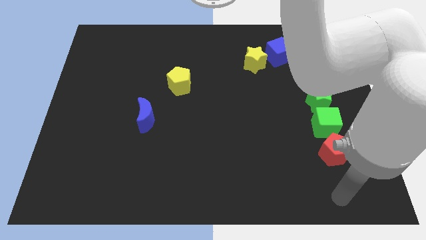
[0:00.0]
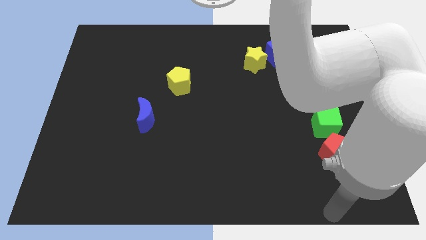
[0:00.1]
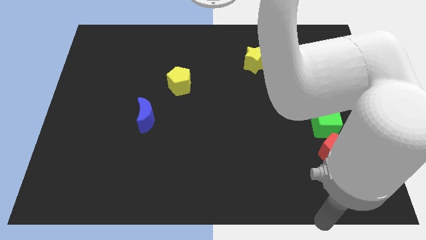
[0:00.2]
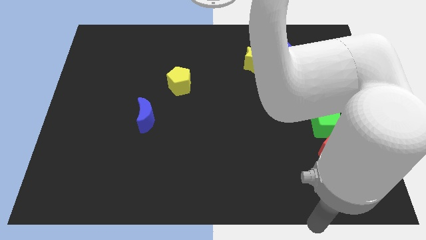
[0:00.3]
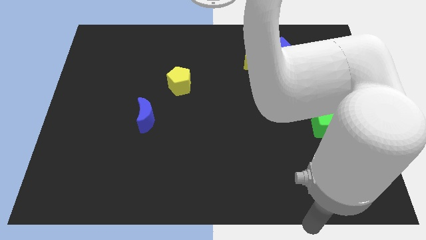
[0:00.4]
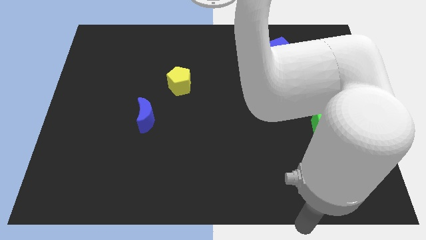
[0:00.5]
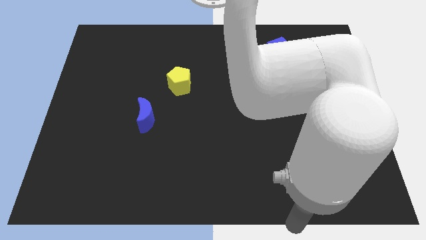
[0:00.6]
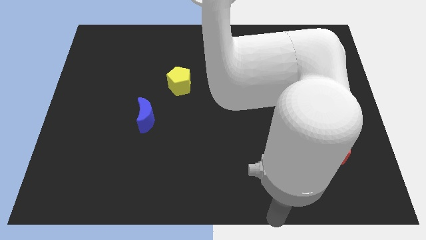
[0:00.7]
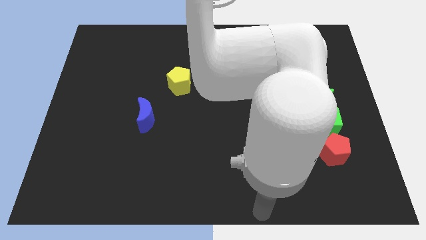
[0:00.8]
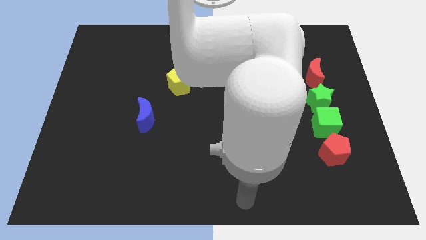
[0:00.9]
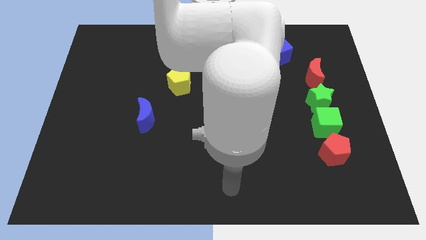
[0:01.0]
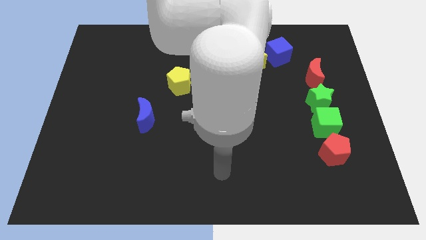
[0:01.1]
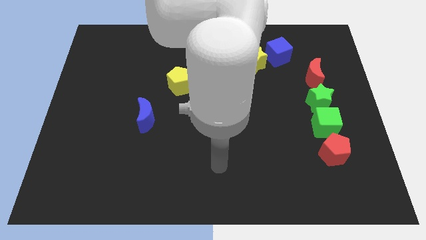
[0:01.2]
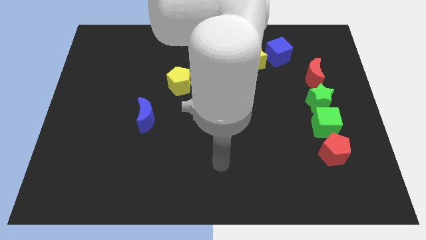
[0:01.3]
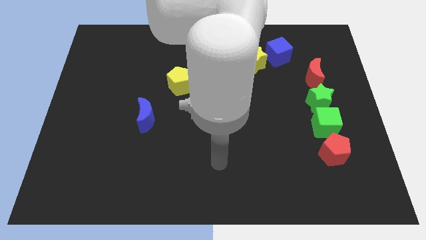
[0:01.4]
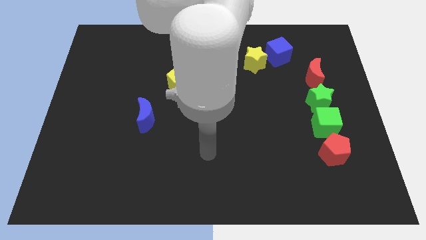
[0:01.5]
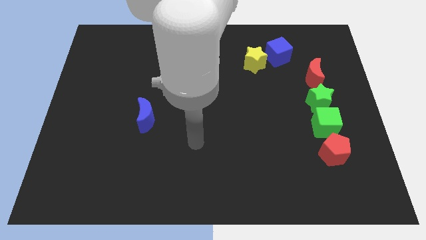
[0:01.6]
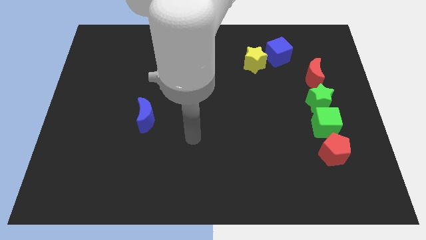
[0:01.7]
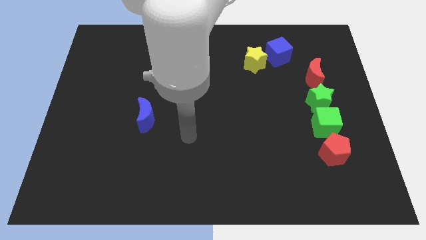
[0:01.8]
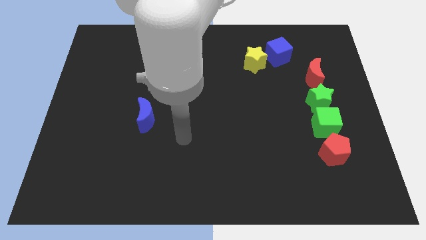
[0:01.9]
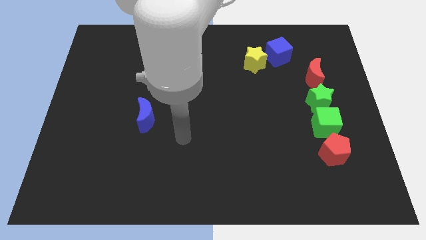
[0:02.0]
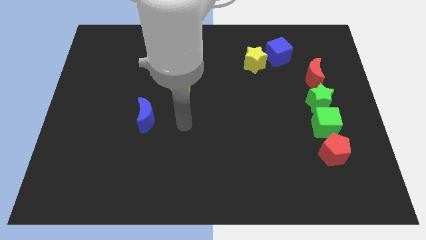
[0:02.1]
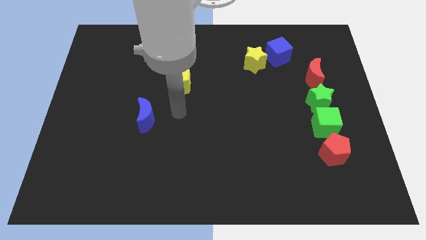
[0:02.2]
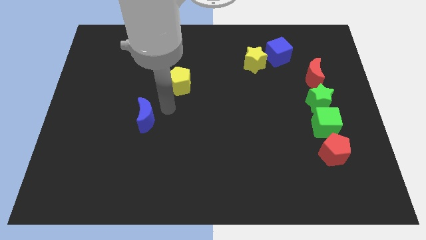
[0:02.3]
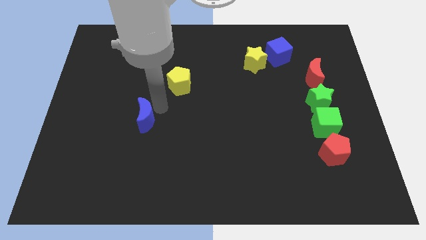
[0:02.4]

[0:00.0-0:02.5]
put your arm at the top right side of blue crescent

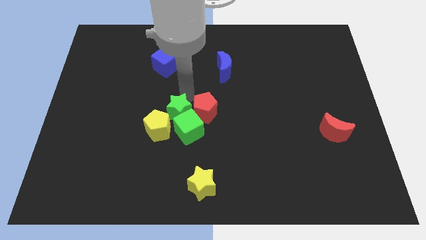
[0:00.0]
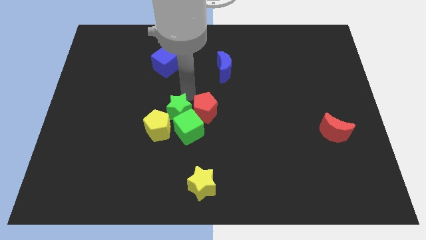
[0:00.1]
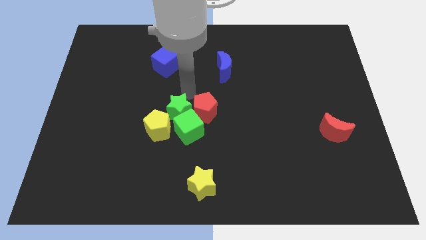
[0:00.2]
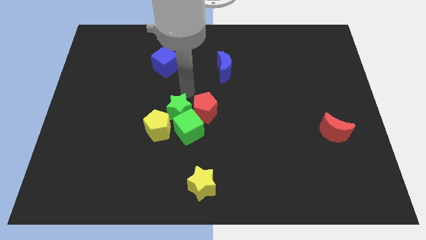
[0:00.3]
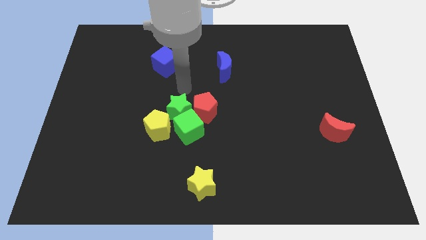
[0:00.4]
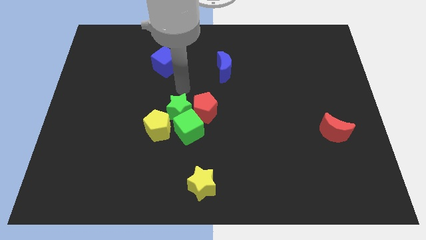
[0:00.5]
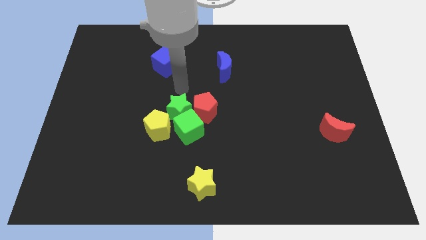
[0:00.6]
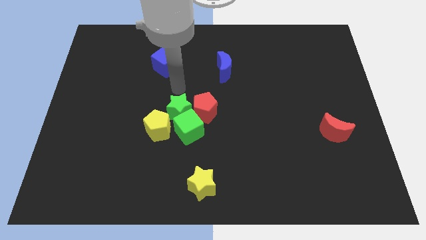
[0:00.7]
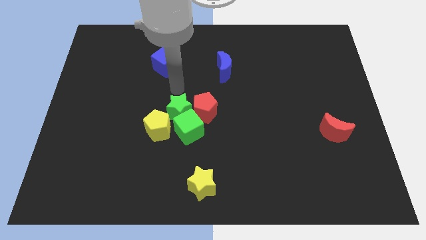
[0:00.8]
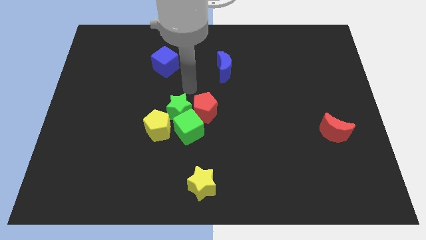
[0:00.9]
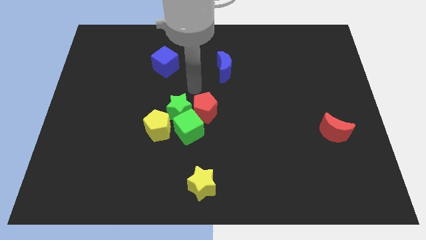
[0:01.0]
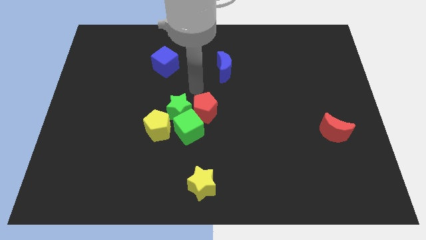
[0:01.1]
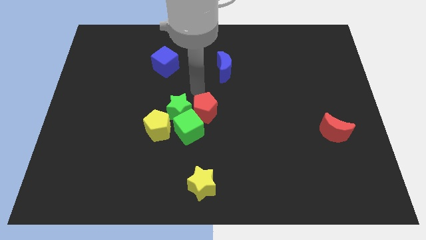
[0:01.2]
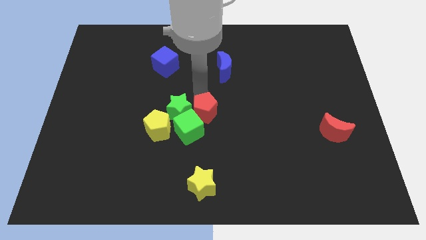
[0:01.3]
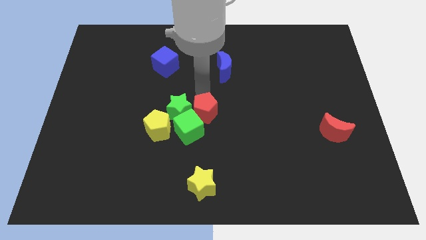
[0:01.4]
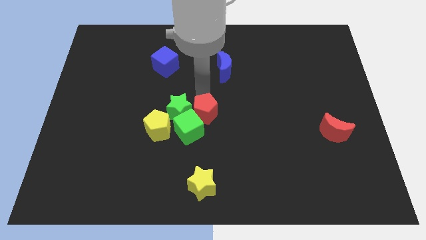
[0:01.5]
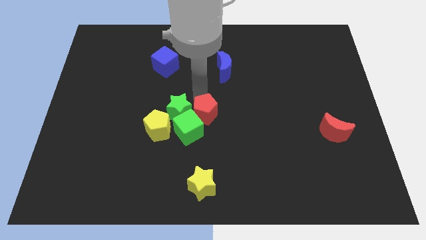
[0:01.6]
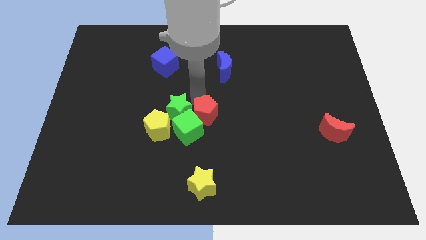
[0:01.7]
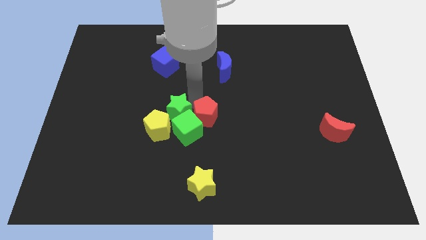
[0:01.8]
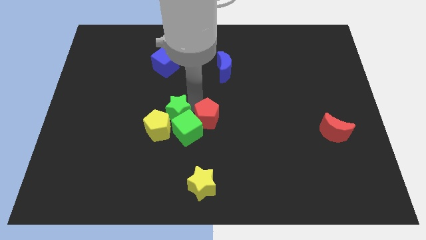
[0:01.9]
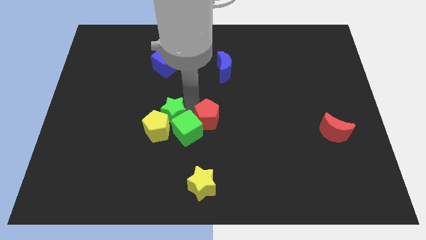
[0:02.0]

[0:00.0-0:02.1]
place your hand in between green star and red pentagon

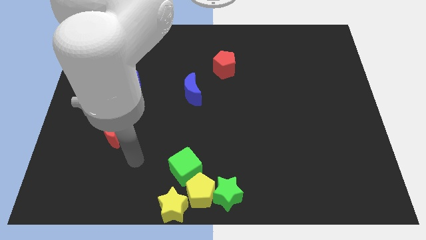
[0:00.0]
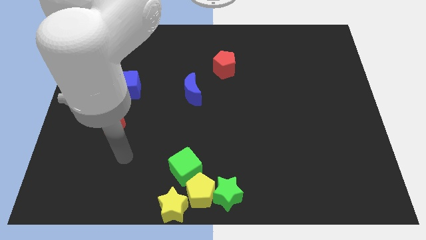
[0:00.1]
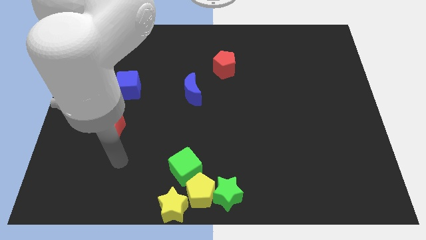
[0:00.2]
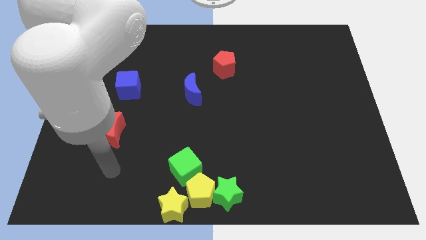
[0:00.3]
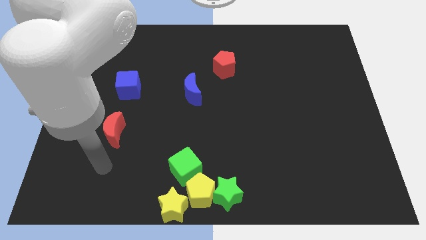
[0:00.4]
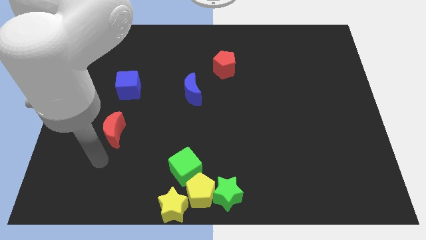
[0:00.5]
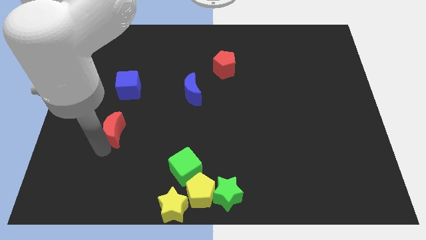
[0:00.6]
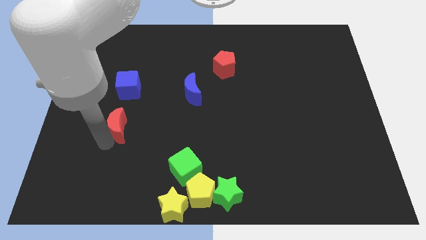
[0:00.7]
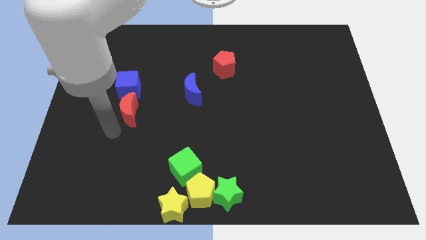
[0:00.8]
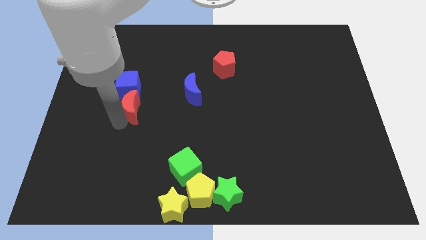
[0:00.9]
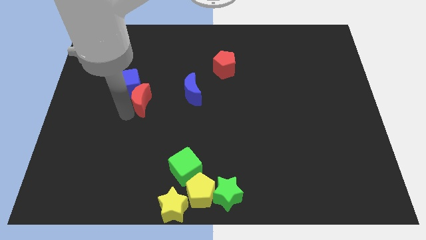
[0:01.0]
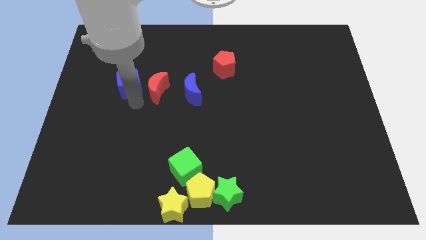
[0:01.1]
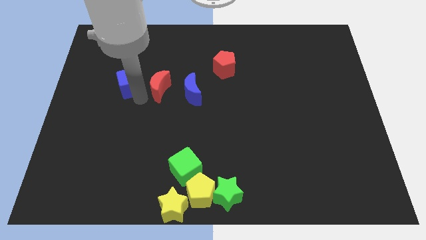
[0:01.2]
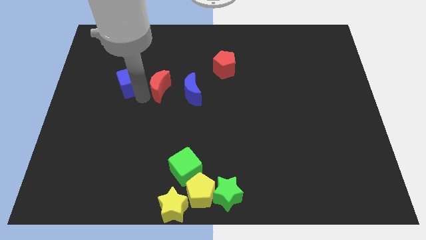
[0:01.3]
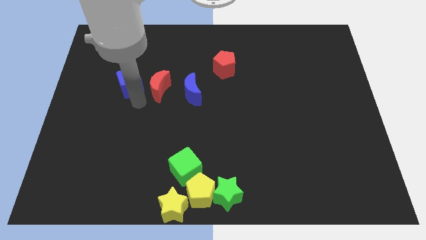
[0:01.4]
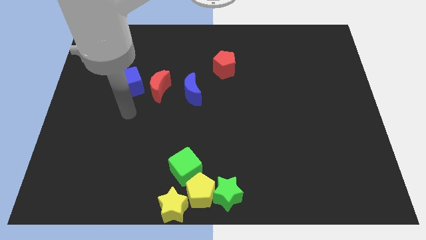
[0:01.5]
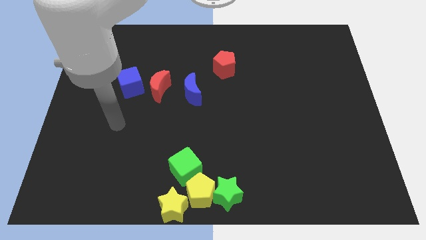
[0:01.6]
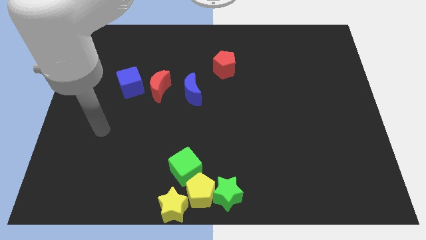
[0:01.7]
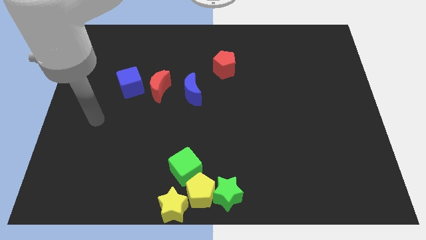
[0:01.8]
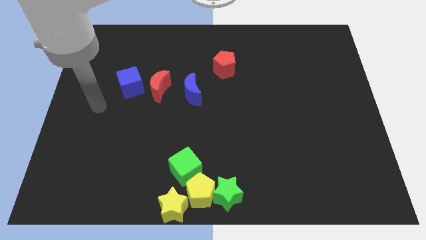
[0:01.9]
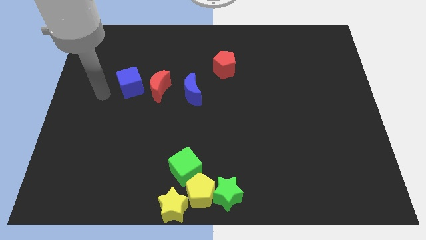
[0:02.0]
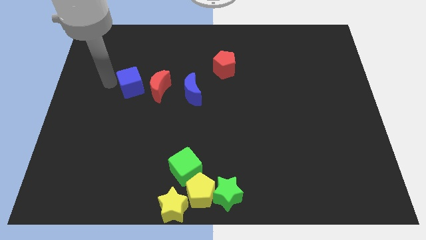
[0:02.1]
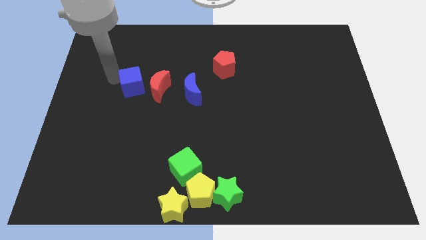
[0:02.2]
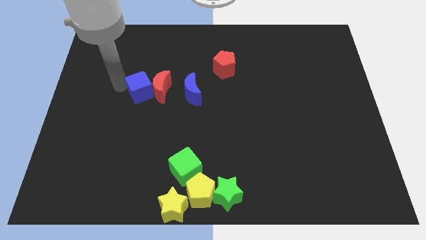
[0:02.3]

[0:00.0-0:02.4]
move red moon in between blue blocks

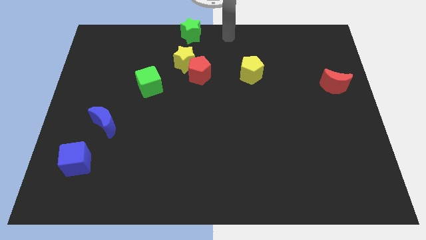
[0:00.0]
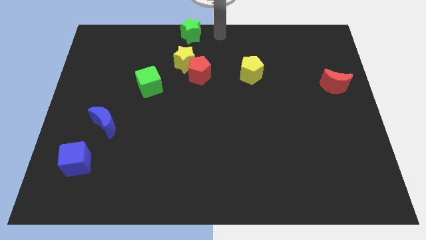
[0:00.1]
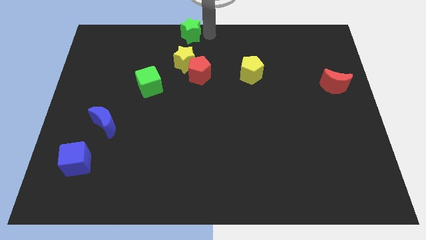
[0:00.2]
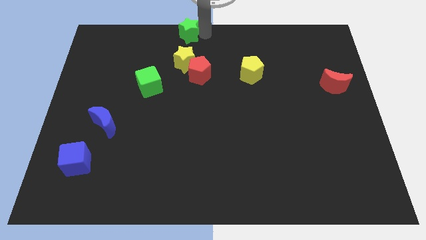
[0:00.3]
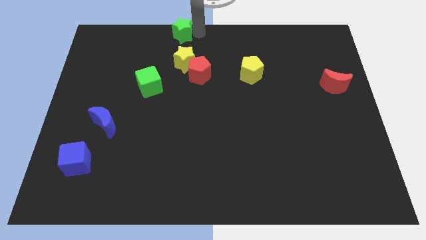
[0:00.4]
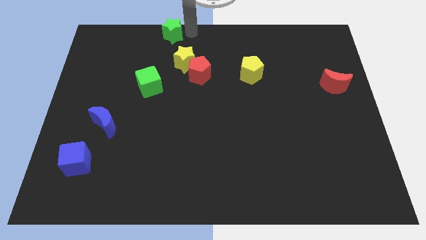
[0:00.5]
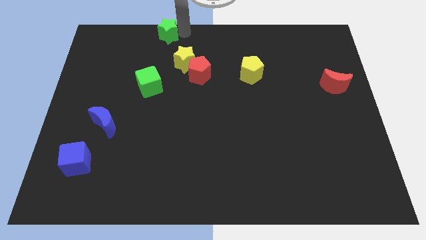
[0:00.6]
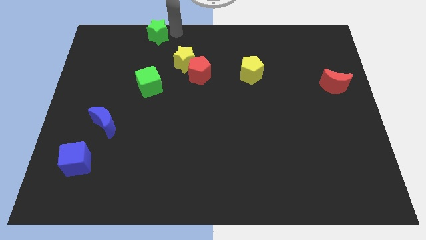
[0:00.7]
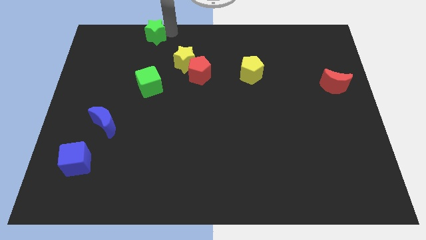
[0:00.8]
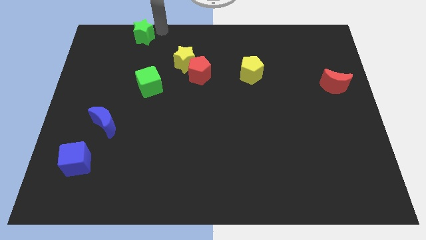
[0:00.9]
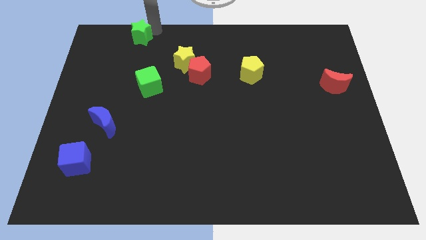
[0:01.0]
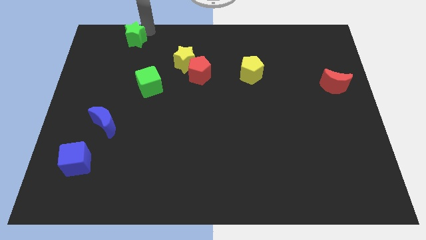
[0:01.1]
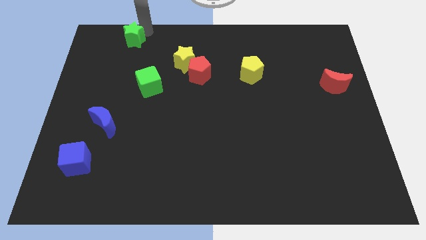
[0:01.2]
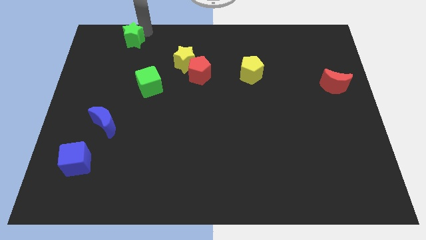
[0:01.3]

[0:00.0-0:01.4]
push the green star slightly on the left side

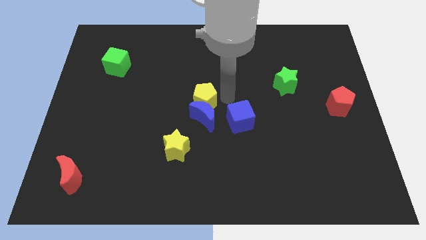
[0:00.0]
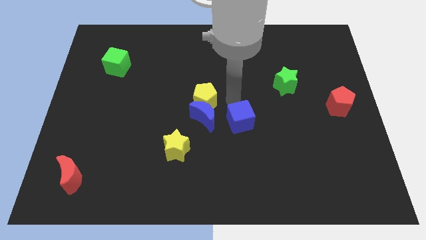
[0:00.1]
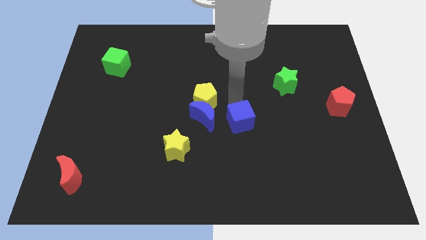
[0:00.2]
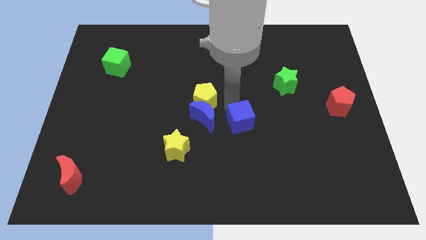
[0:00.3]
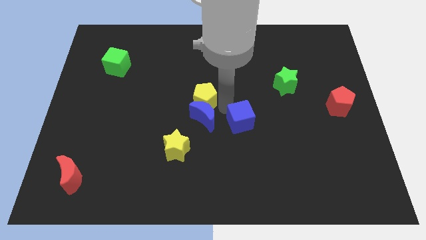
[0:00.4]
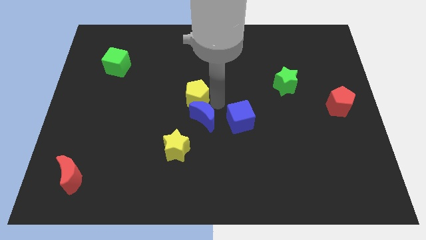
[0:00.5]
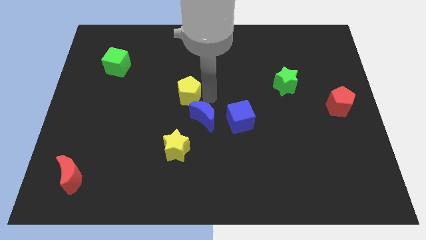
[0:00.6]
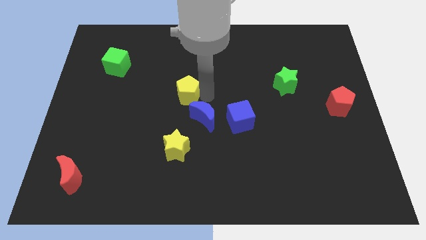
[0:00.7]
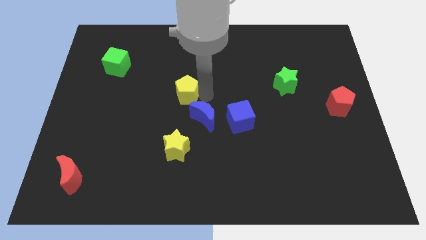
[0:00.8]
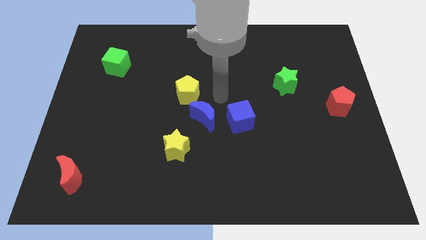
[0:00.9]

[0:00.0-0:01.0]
move yellow pentagon vertically above yellow star
